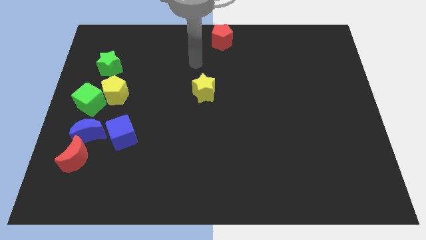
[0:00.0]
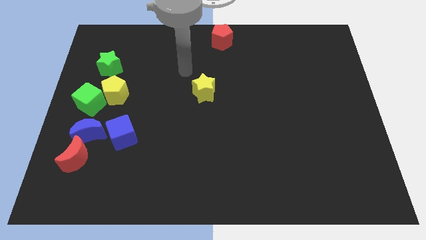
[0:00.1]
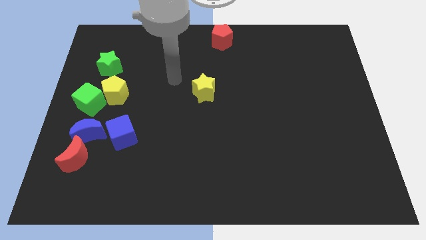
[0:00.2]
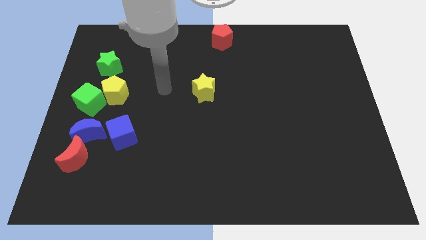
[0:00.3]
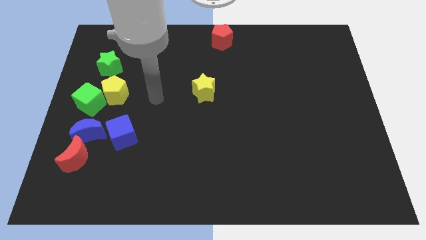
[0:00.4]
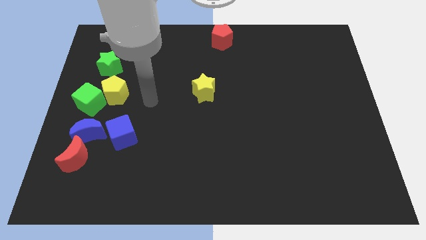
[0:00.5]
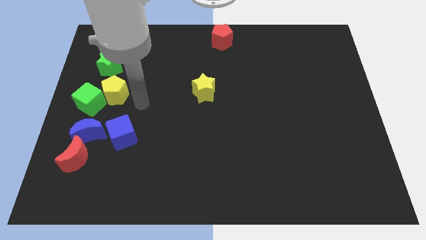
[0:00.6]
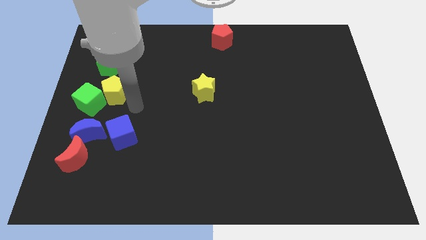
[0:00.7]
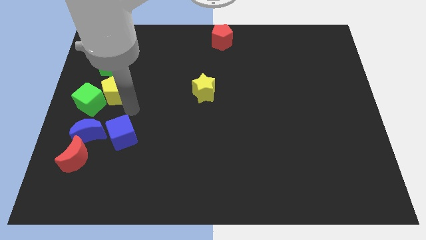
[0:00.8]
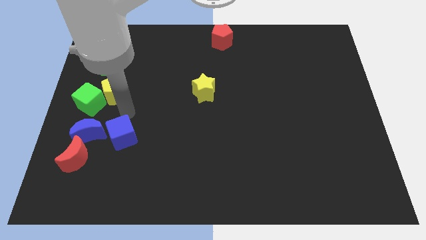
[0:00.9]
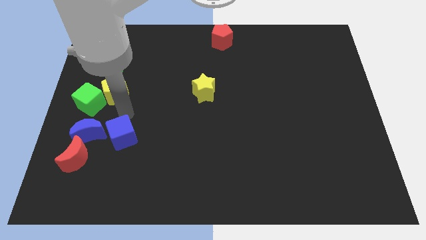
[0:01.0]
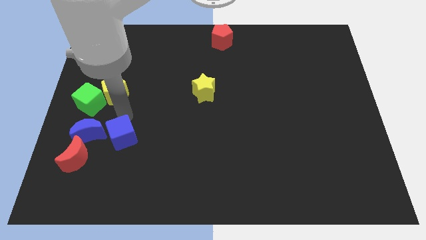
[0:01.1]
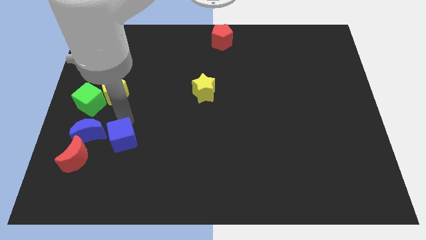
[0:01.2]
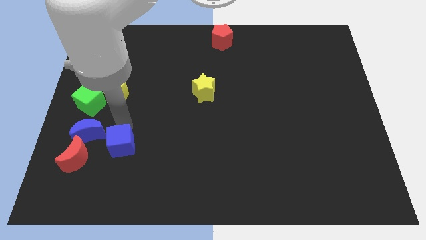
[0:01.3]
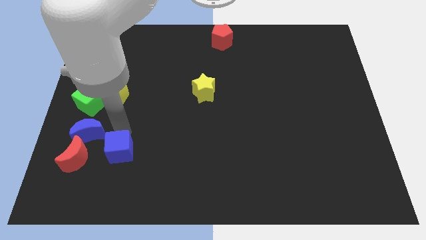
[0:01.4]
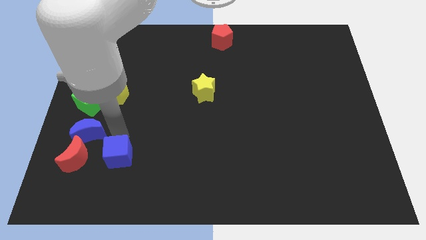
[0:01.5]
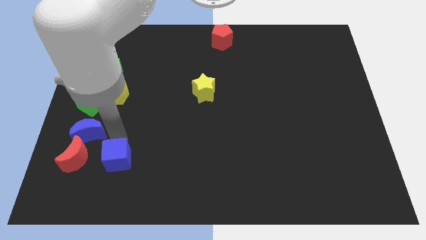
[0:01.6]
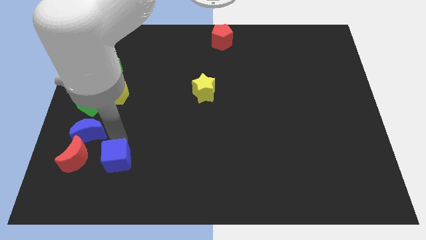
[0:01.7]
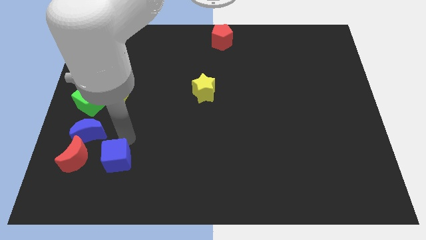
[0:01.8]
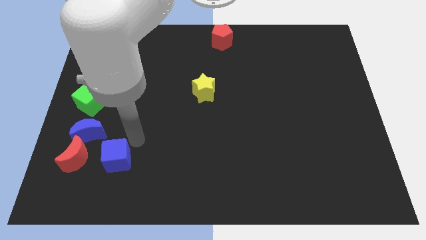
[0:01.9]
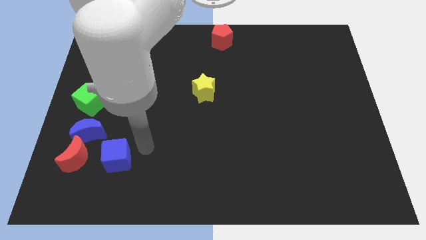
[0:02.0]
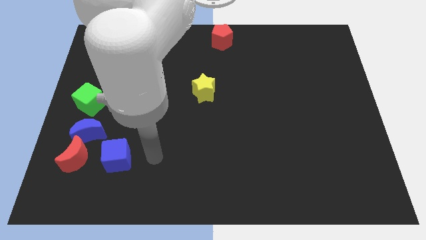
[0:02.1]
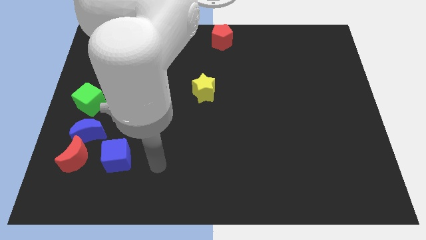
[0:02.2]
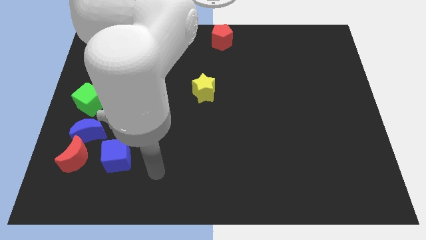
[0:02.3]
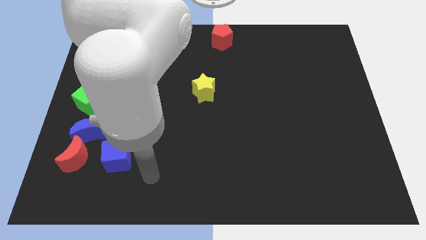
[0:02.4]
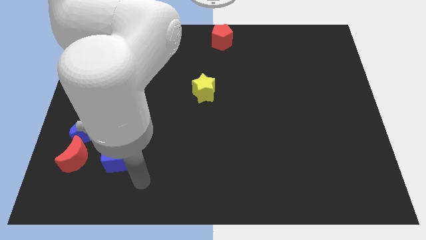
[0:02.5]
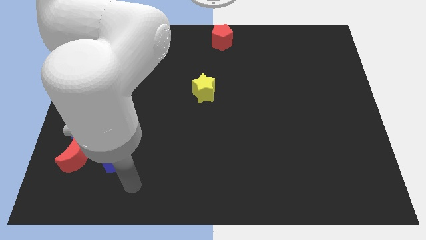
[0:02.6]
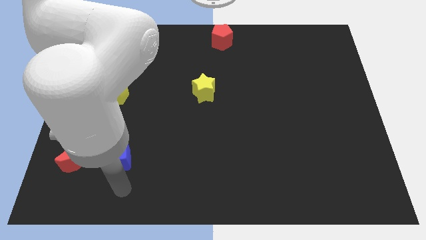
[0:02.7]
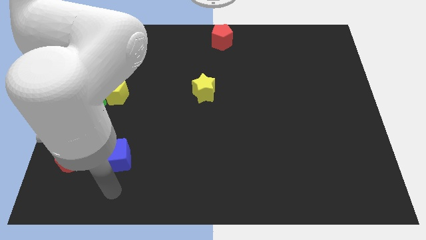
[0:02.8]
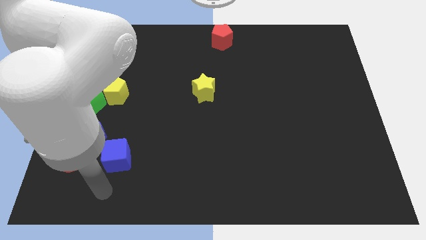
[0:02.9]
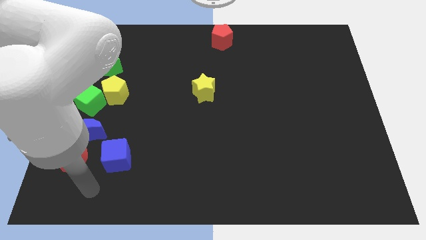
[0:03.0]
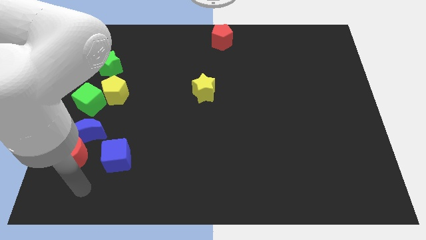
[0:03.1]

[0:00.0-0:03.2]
slightly push the blue cube downwards

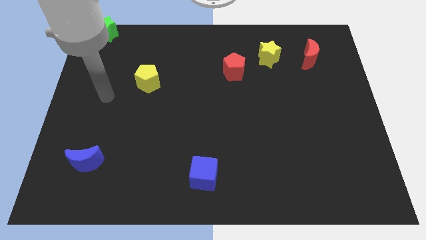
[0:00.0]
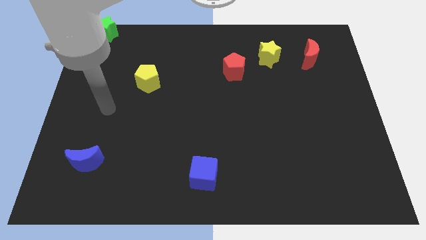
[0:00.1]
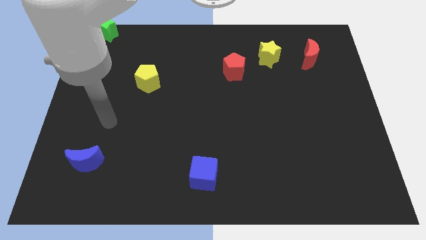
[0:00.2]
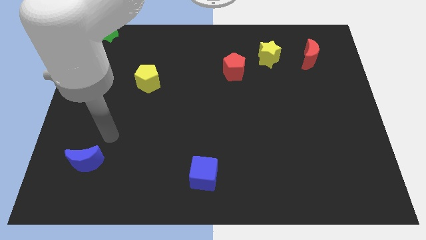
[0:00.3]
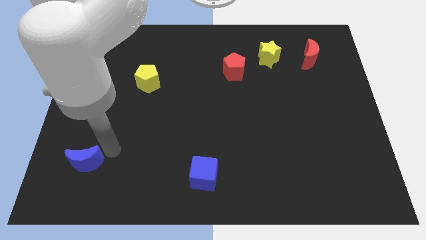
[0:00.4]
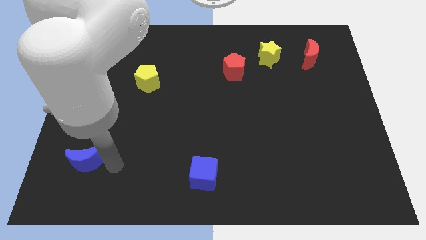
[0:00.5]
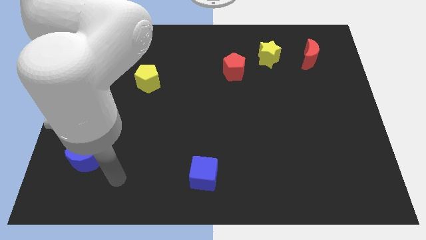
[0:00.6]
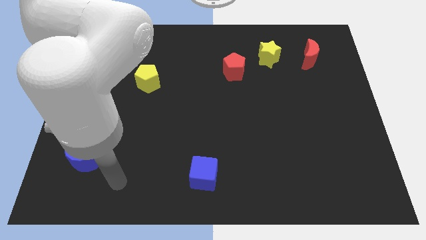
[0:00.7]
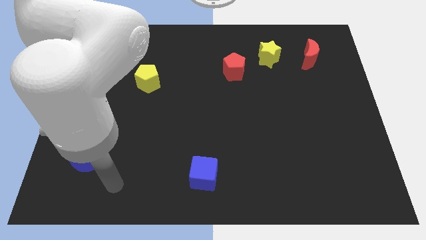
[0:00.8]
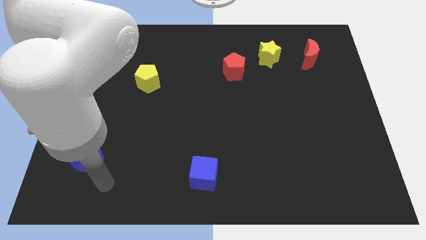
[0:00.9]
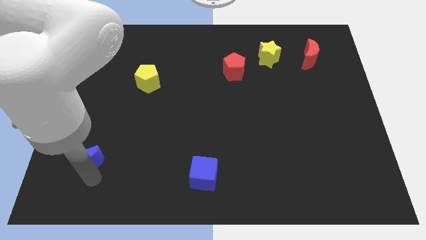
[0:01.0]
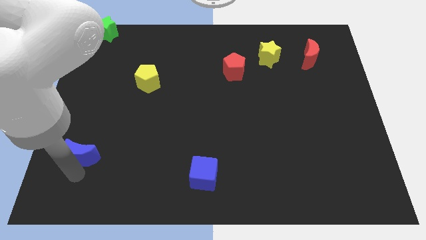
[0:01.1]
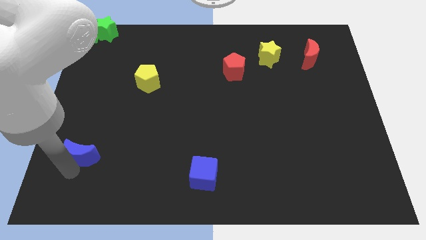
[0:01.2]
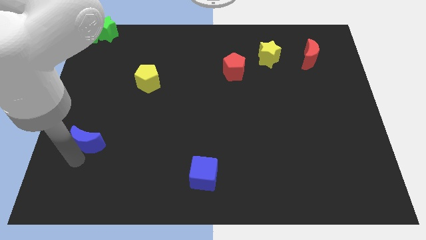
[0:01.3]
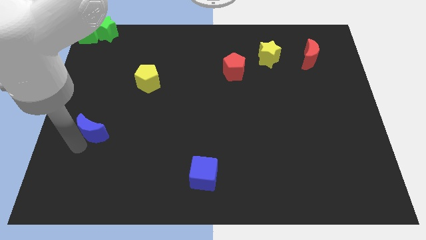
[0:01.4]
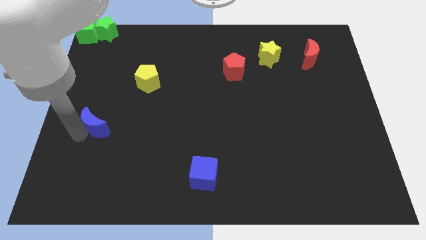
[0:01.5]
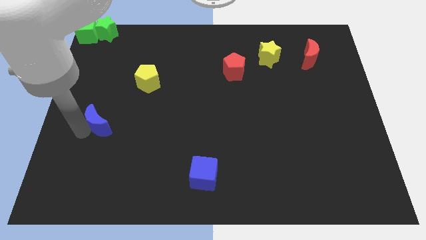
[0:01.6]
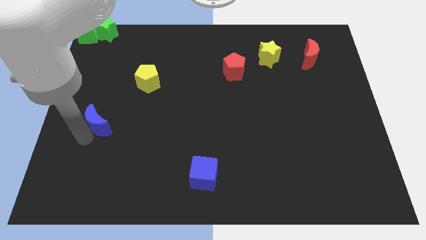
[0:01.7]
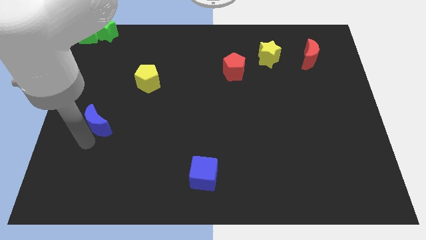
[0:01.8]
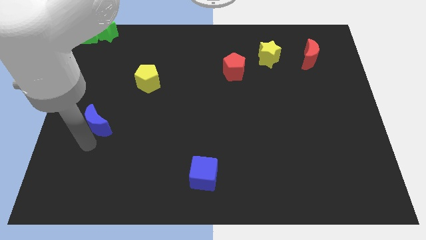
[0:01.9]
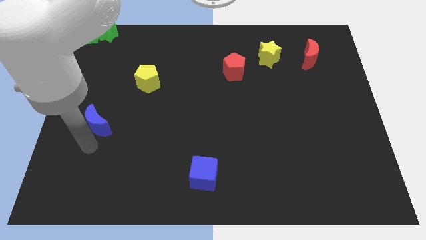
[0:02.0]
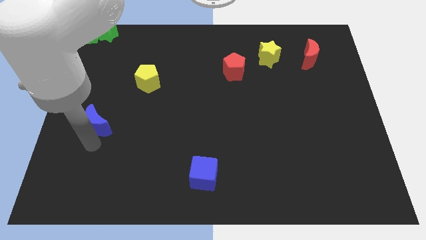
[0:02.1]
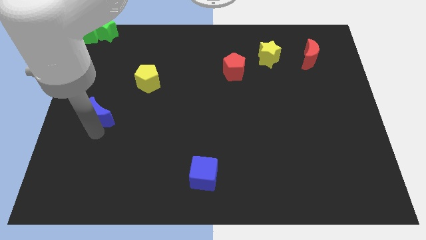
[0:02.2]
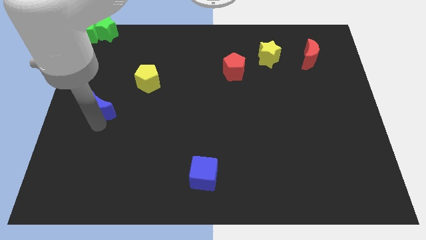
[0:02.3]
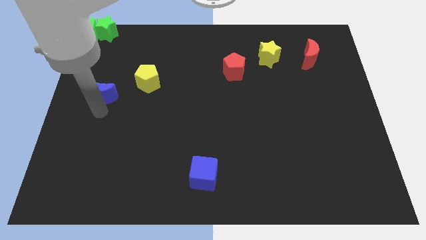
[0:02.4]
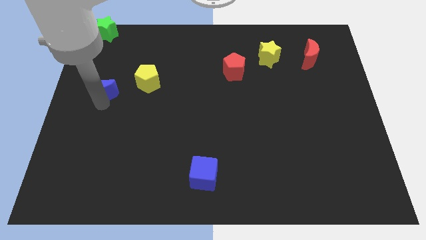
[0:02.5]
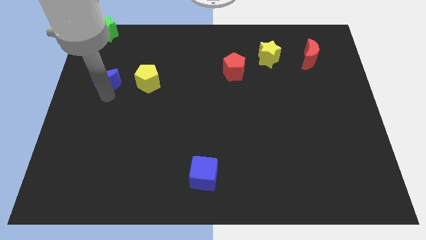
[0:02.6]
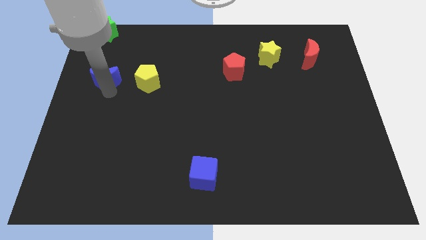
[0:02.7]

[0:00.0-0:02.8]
place the blue crescent to the left side of the yellow pentagon

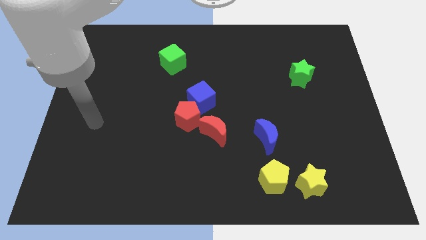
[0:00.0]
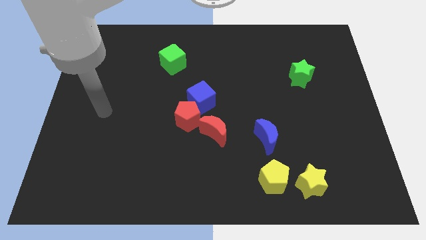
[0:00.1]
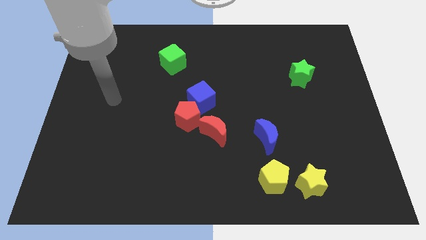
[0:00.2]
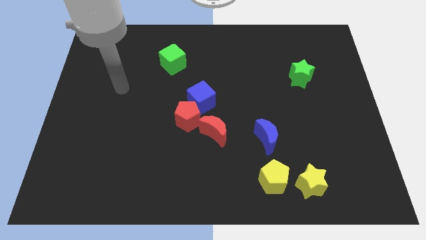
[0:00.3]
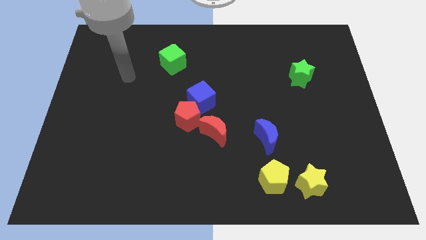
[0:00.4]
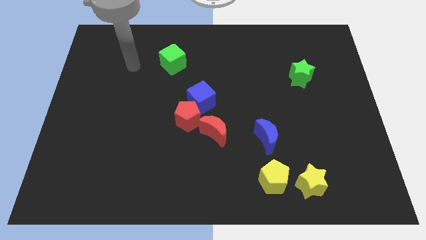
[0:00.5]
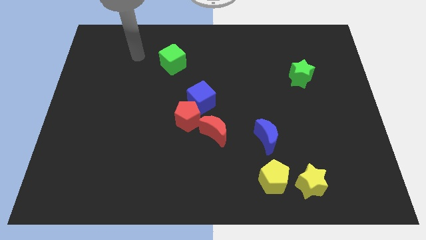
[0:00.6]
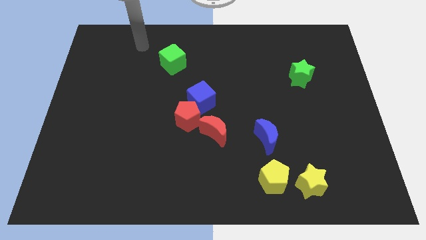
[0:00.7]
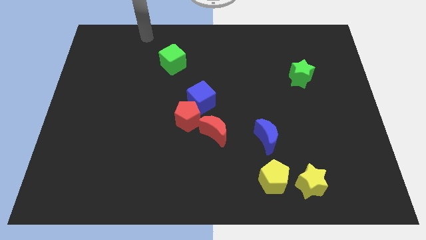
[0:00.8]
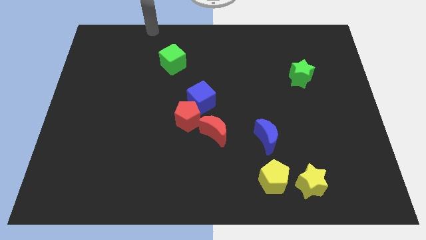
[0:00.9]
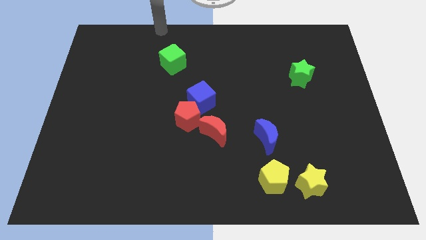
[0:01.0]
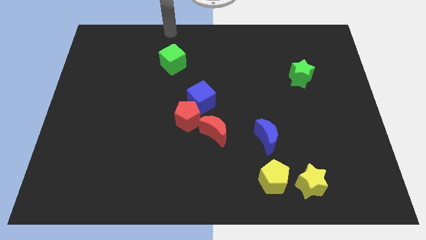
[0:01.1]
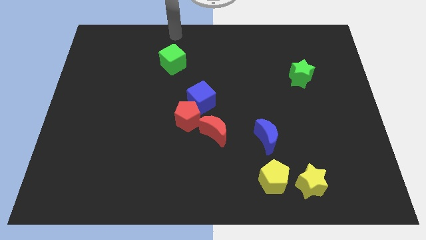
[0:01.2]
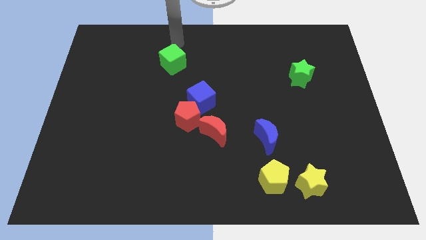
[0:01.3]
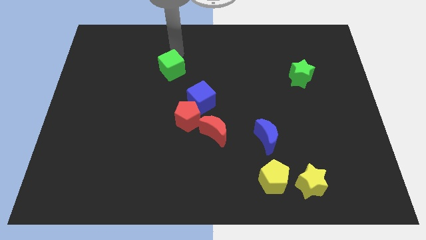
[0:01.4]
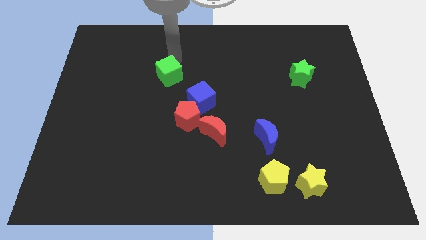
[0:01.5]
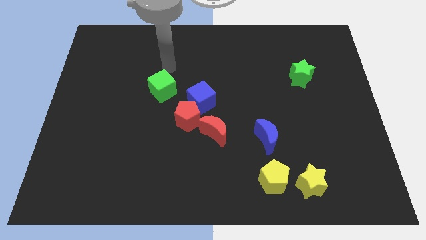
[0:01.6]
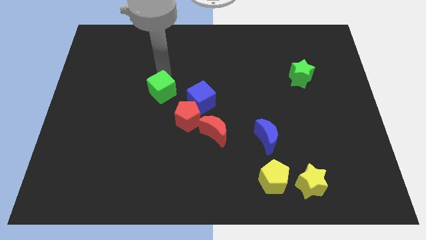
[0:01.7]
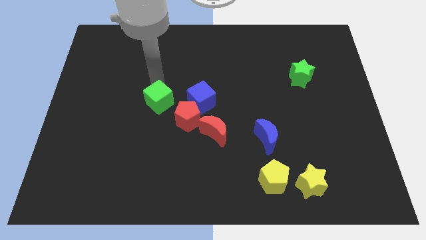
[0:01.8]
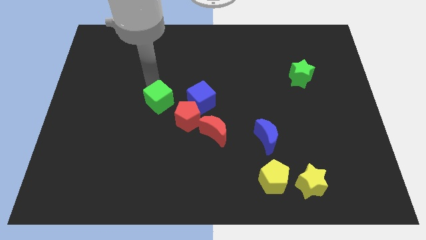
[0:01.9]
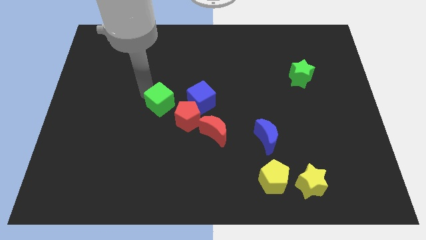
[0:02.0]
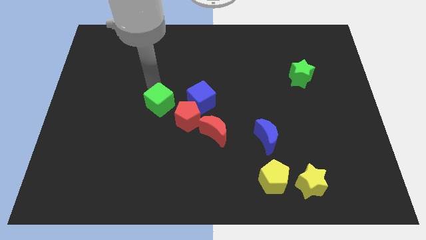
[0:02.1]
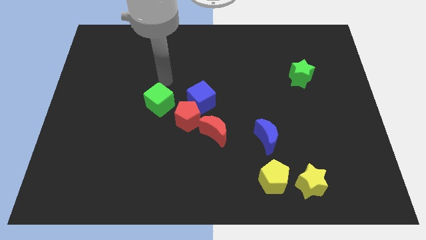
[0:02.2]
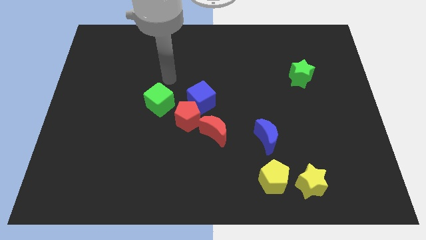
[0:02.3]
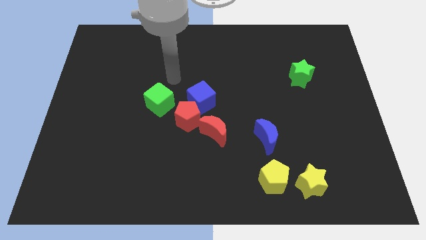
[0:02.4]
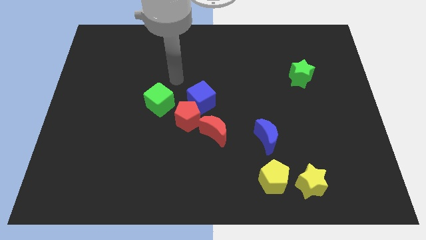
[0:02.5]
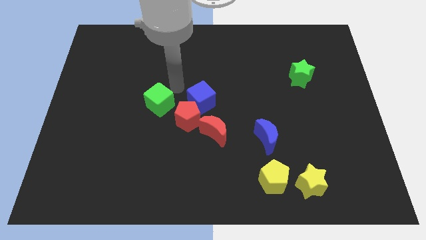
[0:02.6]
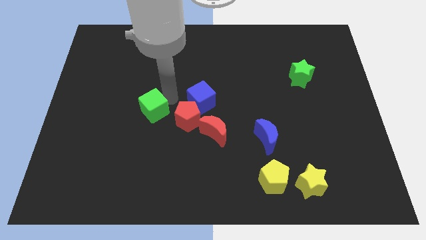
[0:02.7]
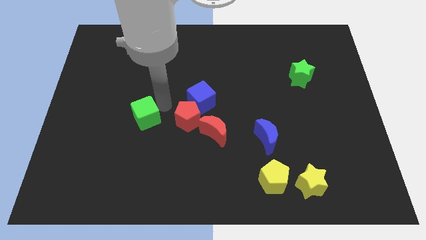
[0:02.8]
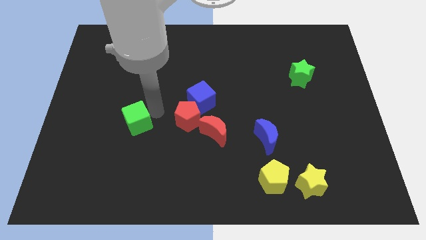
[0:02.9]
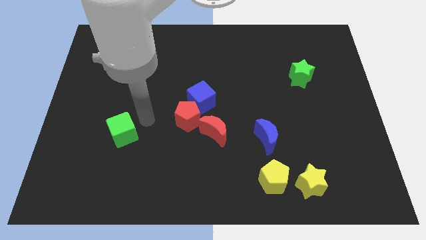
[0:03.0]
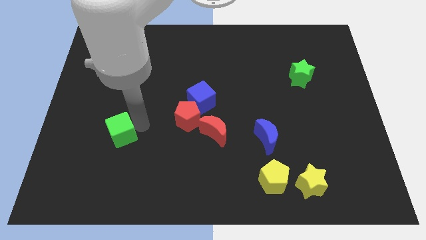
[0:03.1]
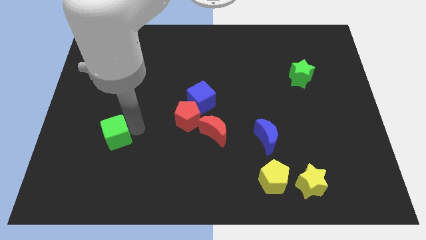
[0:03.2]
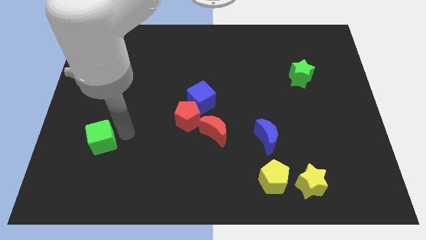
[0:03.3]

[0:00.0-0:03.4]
place the green cube to left of red pentagon
